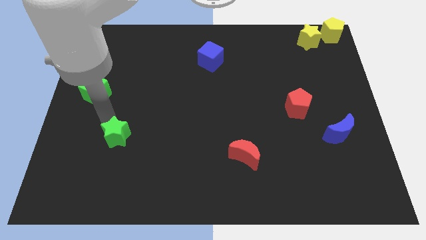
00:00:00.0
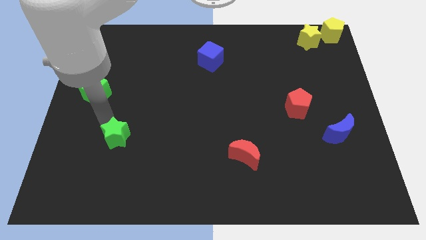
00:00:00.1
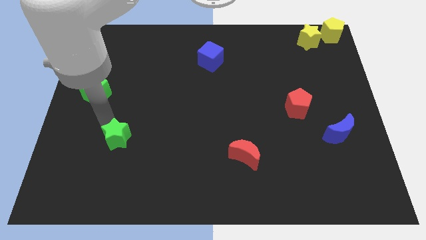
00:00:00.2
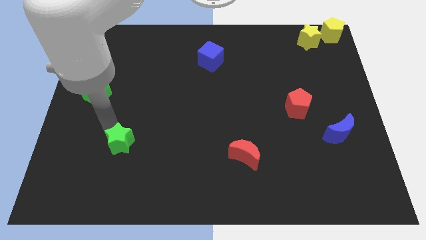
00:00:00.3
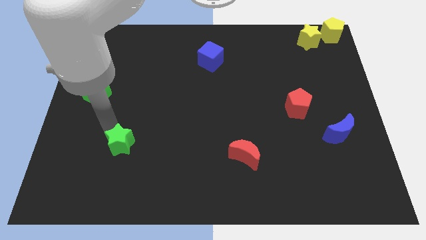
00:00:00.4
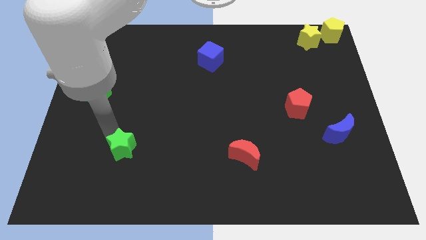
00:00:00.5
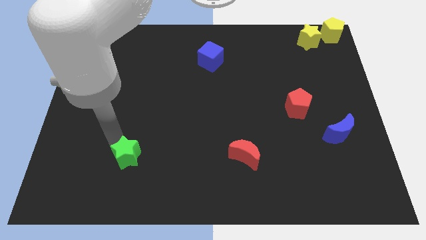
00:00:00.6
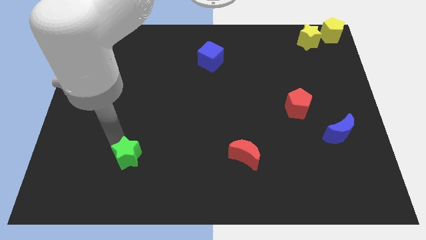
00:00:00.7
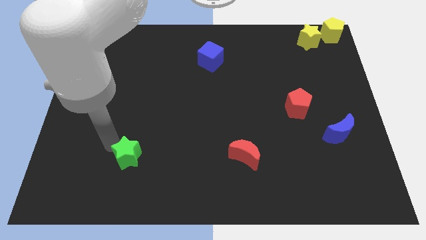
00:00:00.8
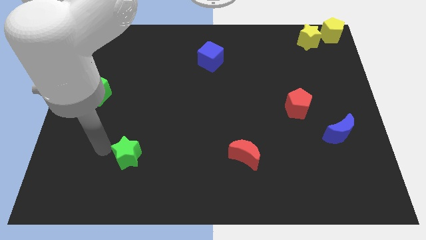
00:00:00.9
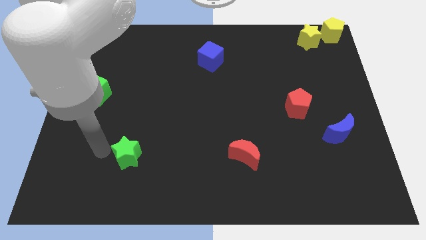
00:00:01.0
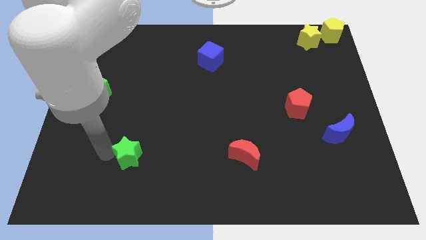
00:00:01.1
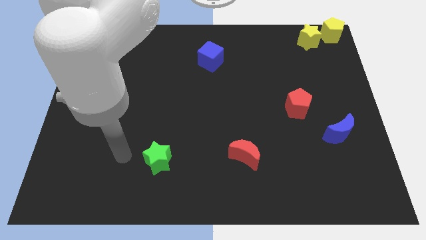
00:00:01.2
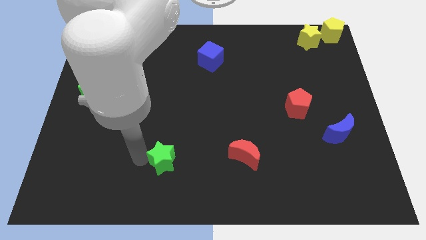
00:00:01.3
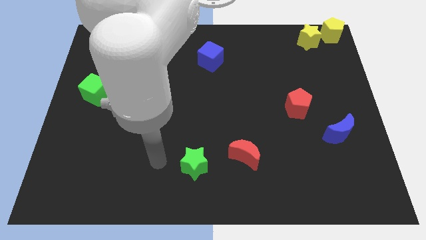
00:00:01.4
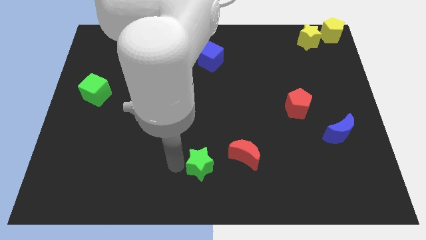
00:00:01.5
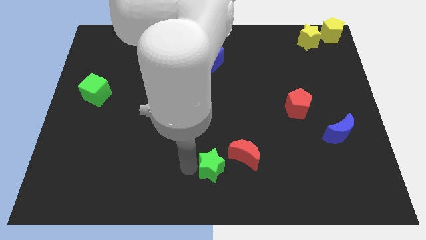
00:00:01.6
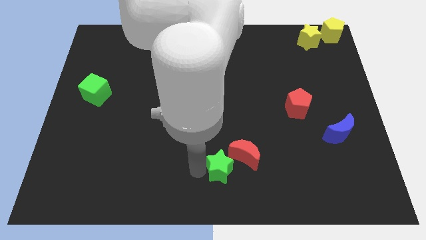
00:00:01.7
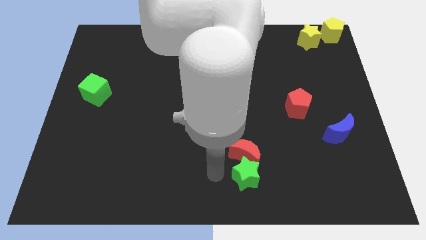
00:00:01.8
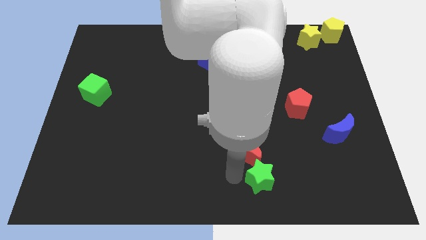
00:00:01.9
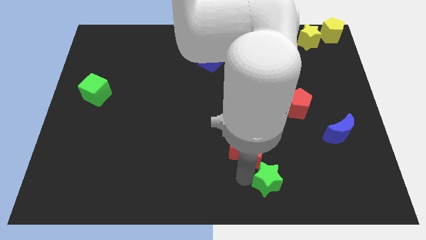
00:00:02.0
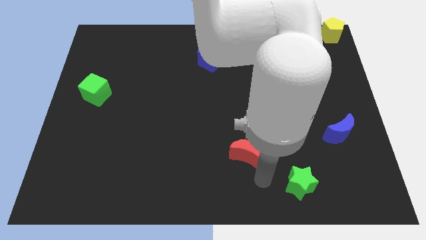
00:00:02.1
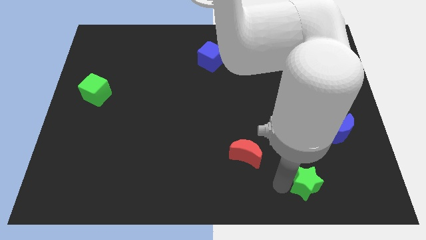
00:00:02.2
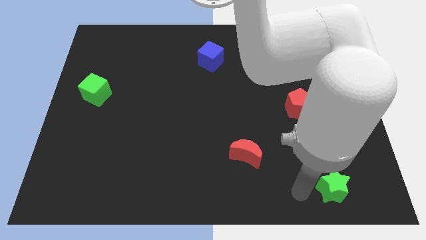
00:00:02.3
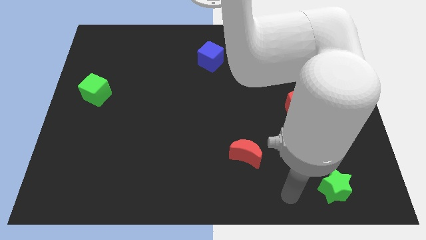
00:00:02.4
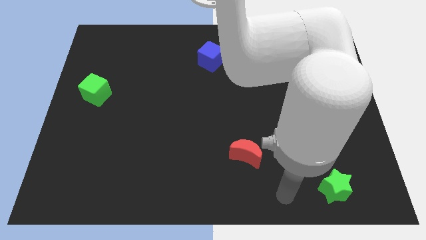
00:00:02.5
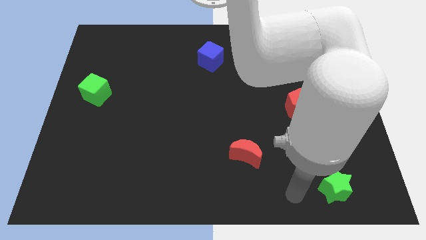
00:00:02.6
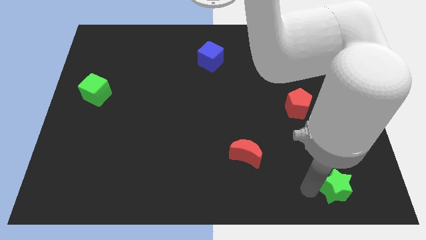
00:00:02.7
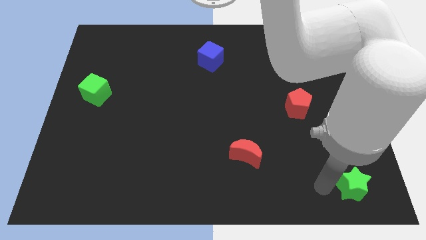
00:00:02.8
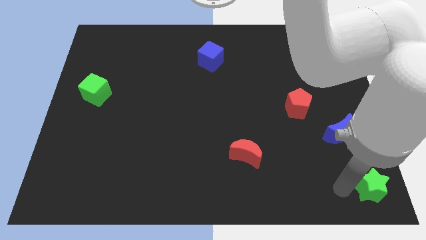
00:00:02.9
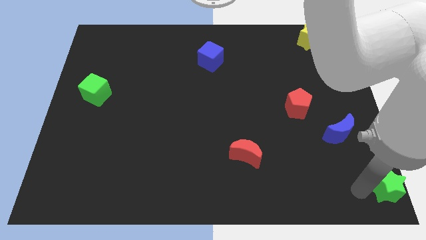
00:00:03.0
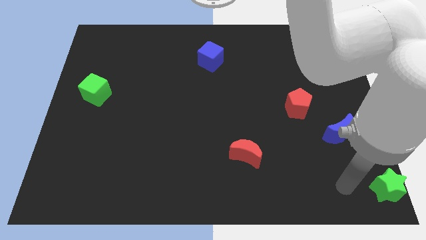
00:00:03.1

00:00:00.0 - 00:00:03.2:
move the green star to the bottom right of the board

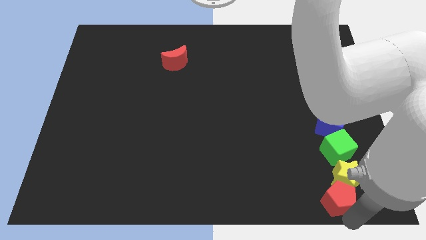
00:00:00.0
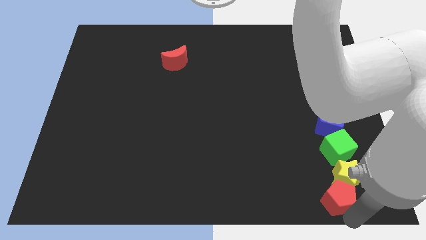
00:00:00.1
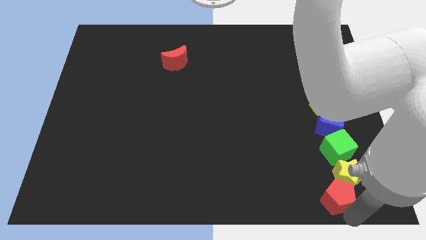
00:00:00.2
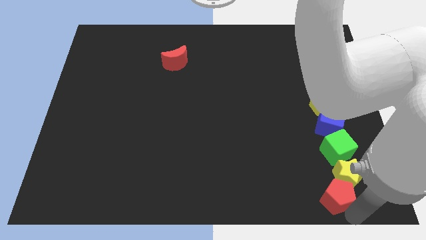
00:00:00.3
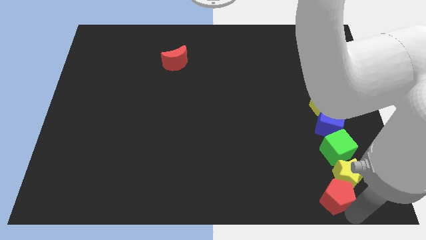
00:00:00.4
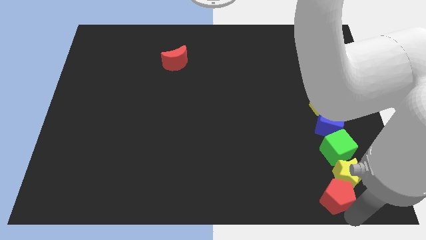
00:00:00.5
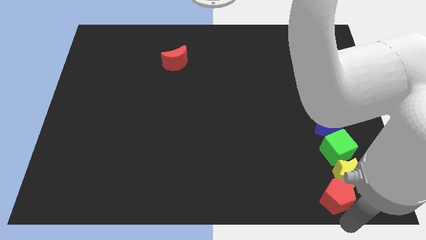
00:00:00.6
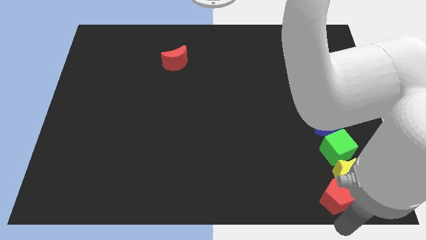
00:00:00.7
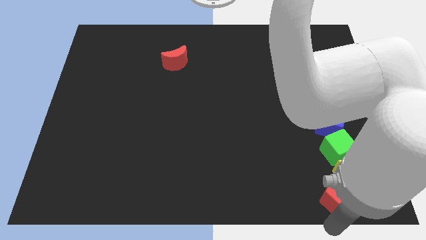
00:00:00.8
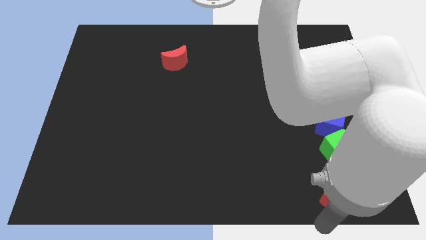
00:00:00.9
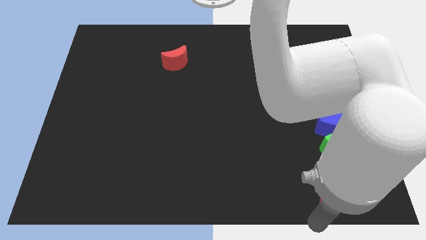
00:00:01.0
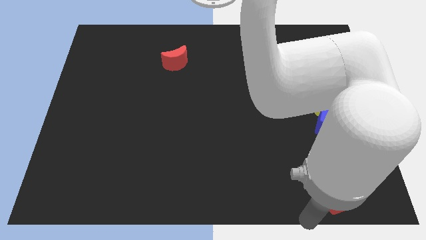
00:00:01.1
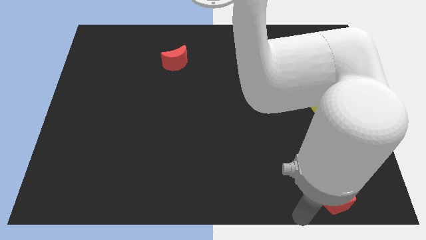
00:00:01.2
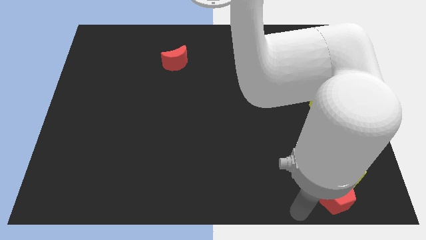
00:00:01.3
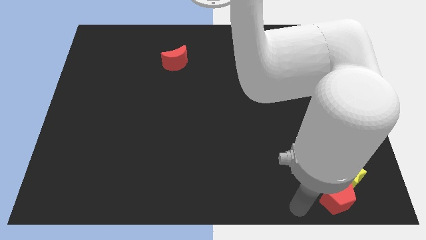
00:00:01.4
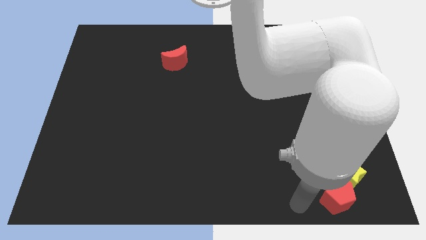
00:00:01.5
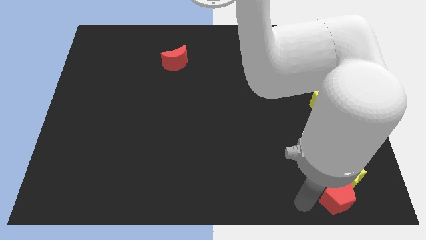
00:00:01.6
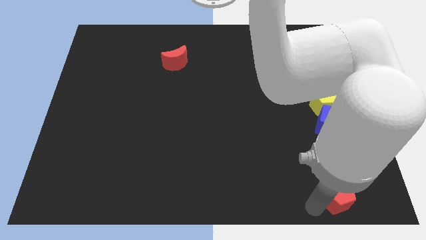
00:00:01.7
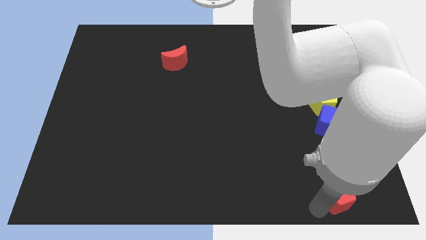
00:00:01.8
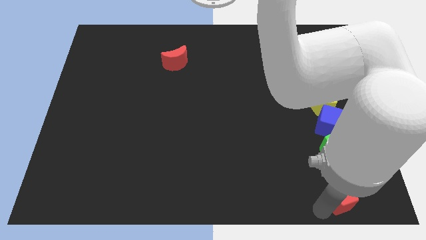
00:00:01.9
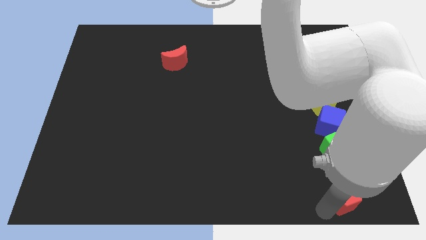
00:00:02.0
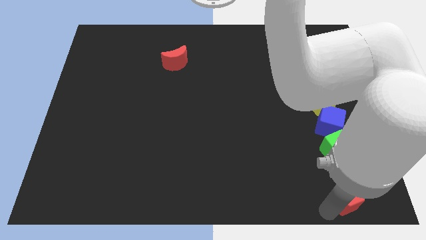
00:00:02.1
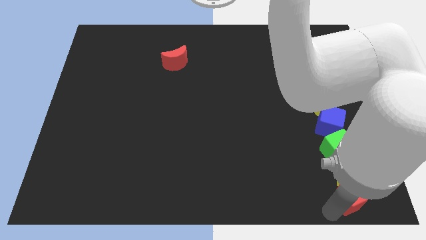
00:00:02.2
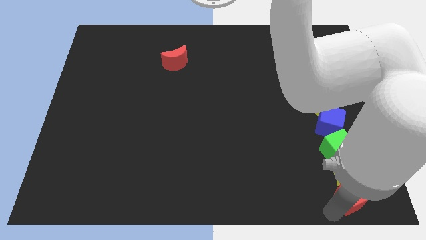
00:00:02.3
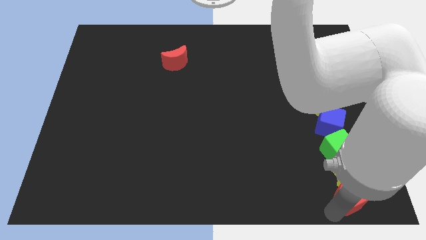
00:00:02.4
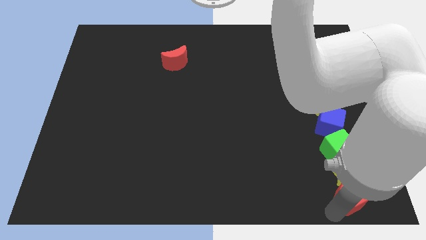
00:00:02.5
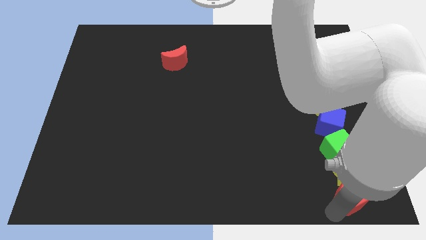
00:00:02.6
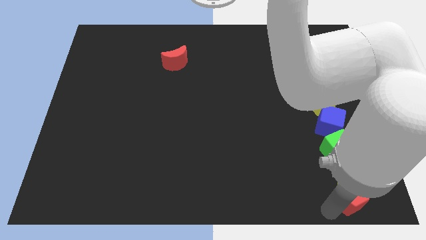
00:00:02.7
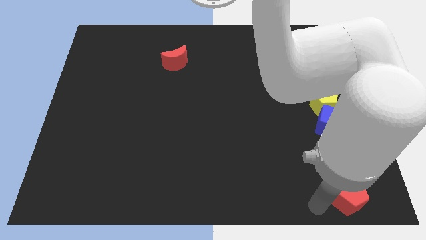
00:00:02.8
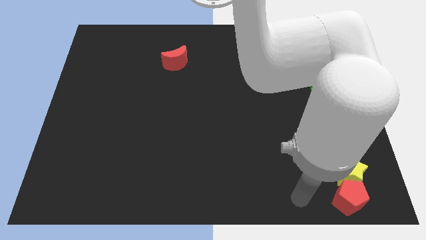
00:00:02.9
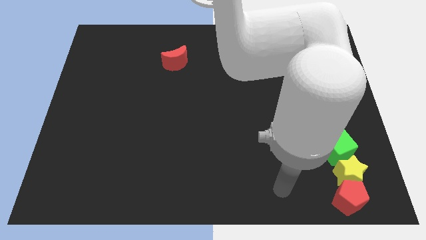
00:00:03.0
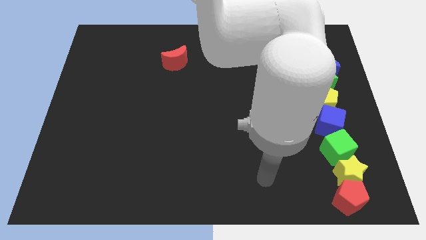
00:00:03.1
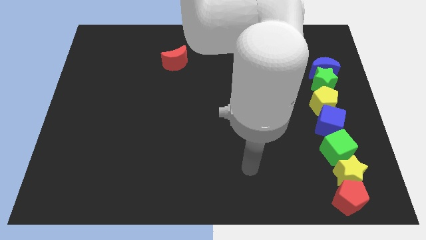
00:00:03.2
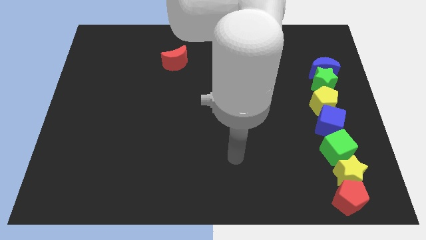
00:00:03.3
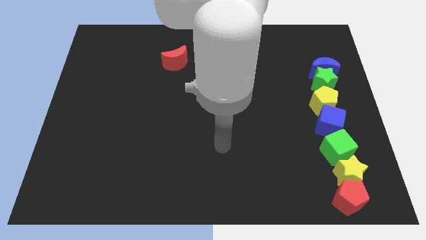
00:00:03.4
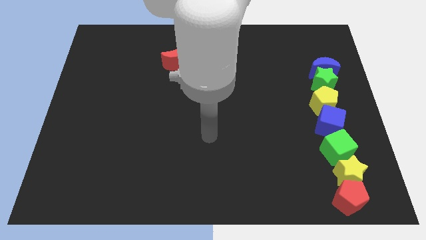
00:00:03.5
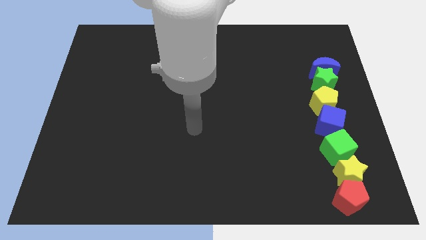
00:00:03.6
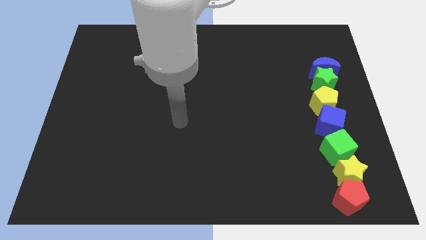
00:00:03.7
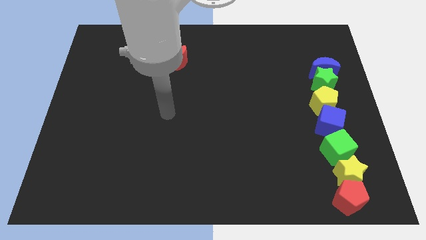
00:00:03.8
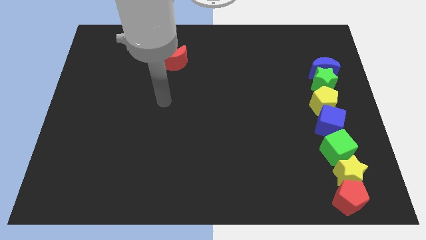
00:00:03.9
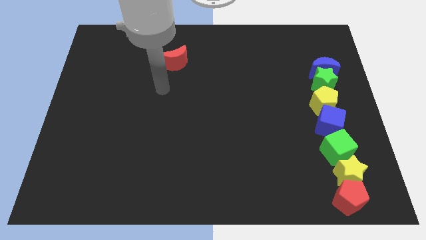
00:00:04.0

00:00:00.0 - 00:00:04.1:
adjust the red pentagon to form a vertical line with group of blocks

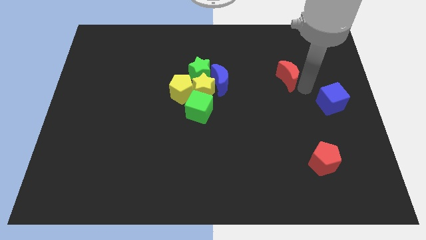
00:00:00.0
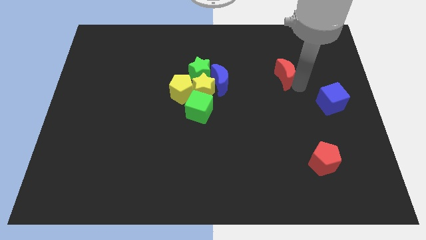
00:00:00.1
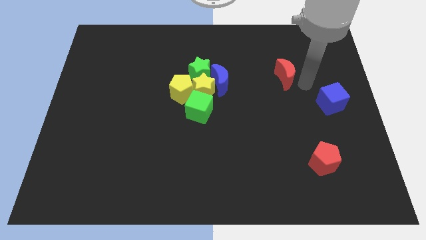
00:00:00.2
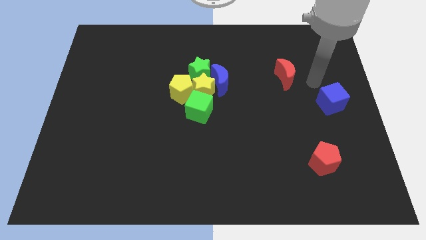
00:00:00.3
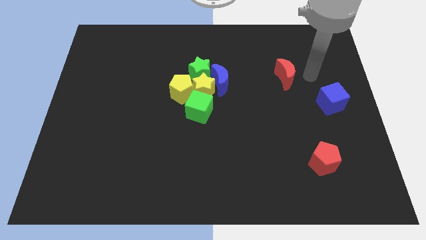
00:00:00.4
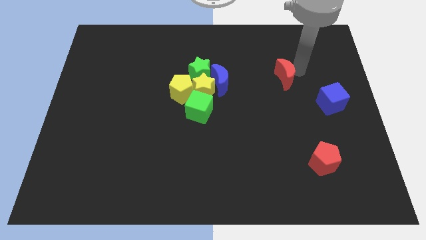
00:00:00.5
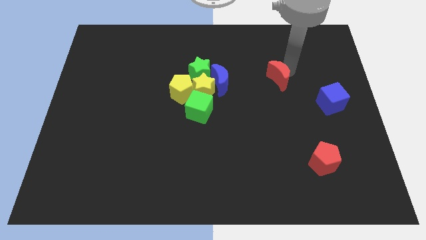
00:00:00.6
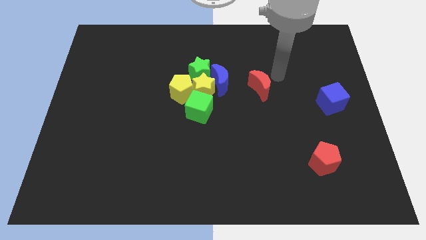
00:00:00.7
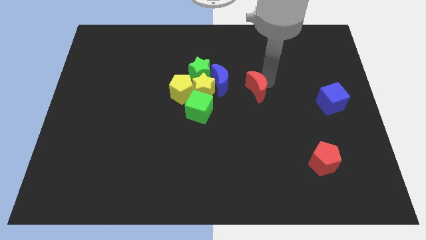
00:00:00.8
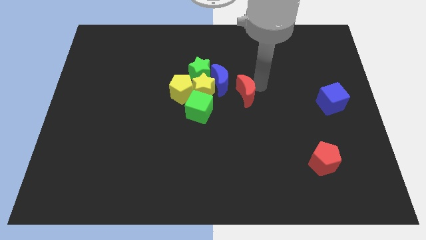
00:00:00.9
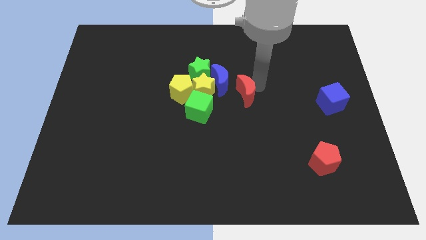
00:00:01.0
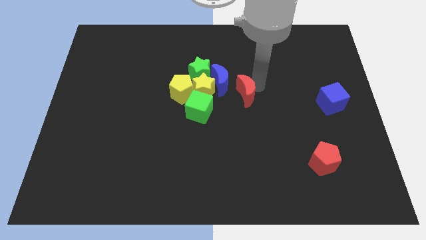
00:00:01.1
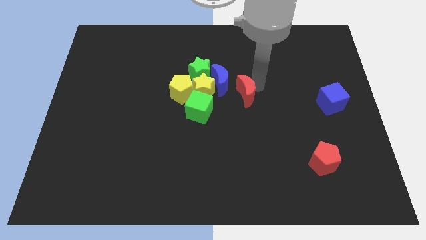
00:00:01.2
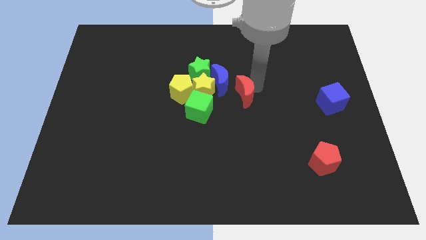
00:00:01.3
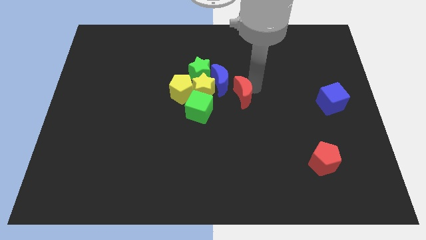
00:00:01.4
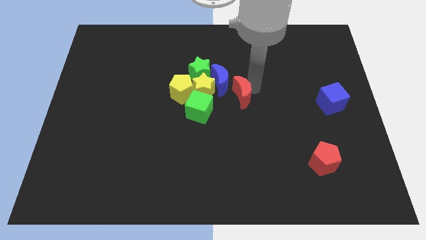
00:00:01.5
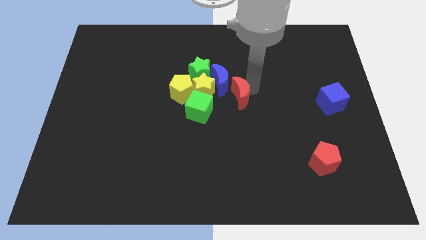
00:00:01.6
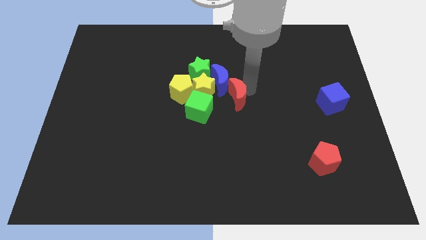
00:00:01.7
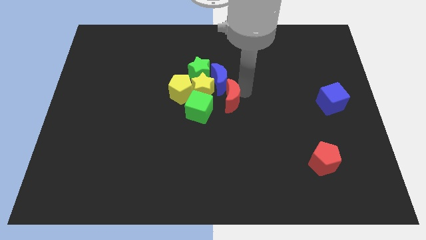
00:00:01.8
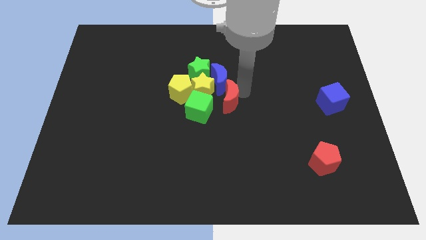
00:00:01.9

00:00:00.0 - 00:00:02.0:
slide the red moon into the right side of the blue moon
